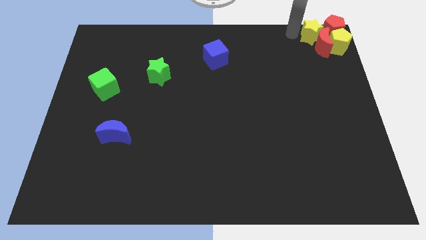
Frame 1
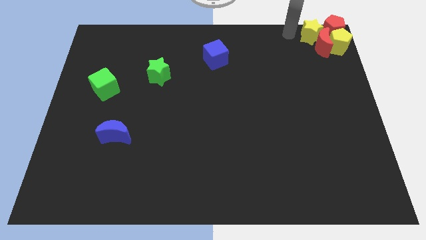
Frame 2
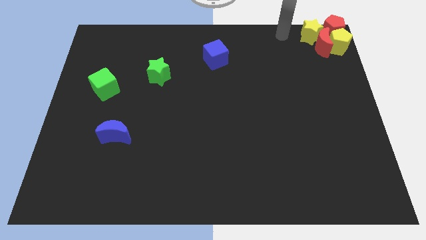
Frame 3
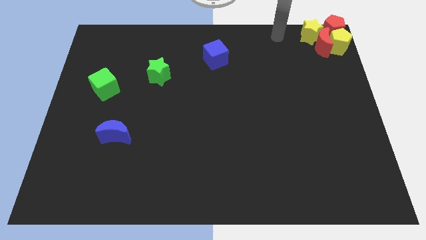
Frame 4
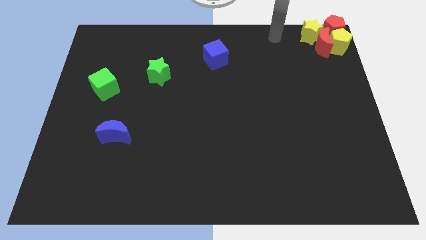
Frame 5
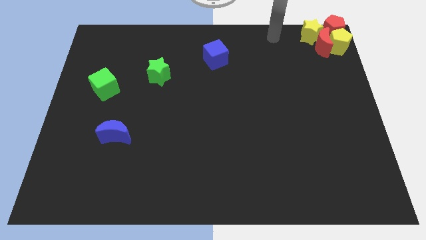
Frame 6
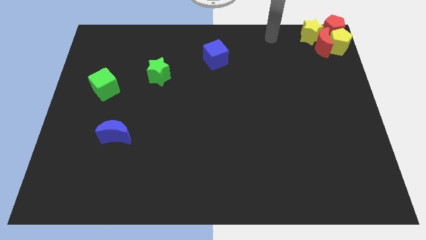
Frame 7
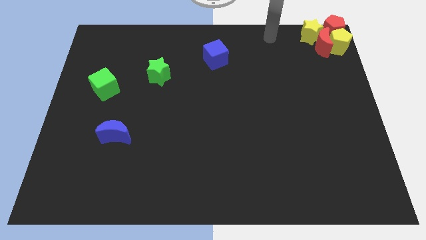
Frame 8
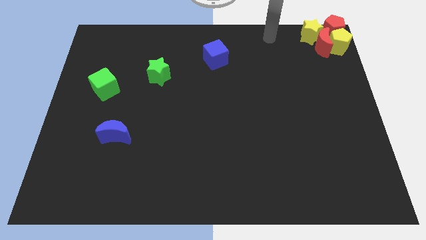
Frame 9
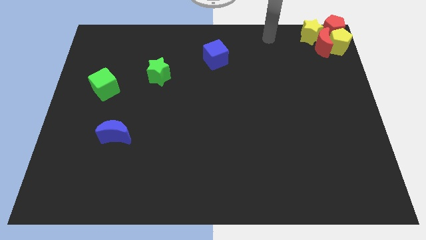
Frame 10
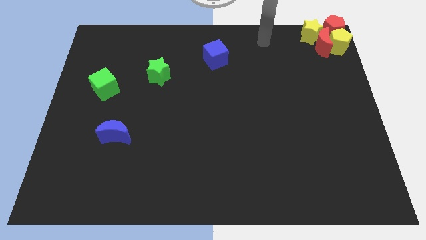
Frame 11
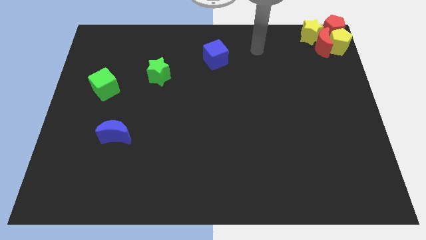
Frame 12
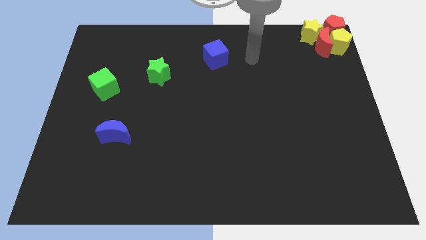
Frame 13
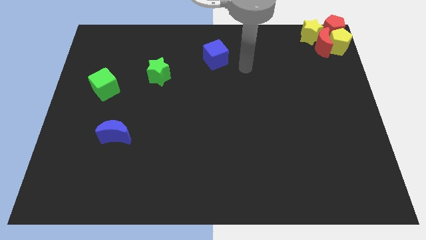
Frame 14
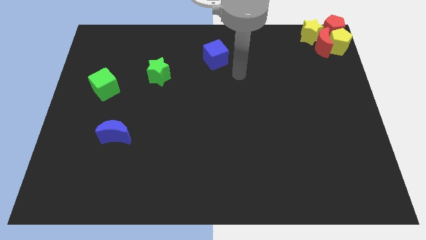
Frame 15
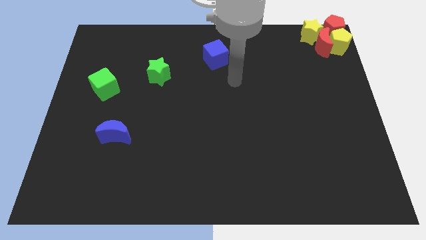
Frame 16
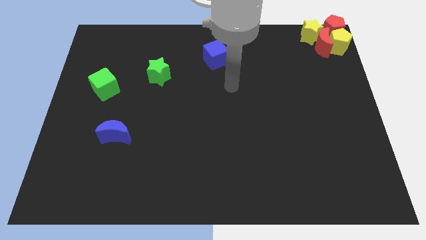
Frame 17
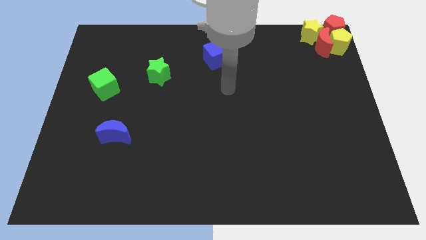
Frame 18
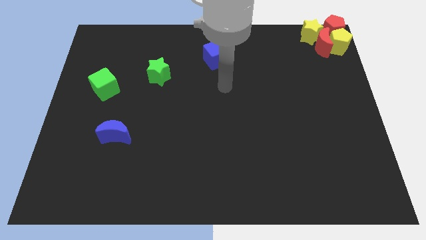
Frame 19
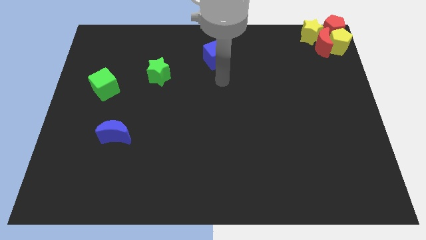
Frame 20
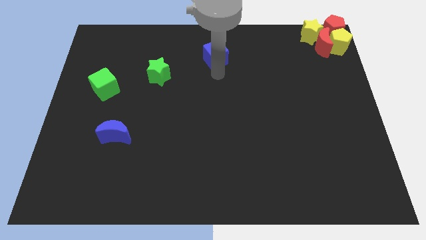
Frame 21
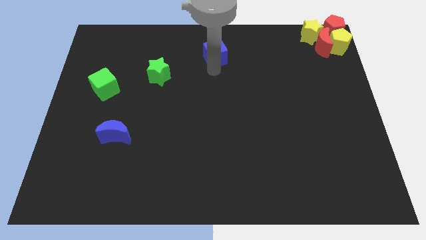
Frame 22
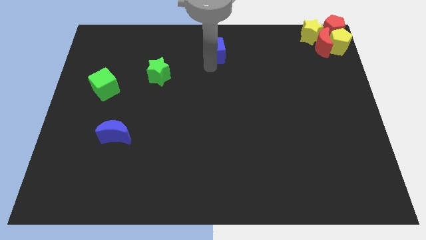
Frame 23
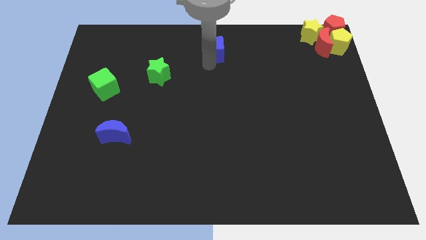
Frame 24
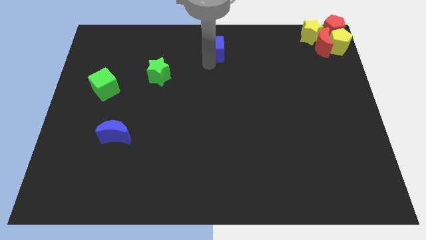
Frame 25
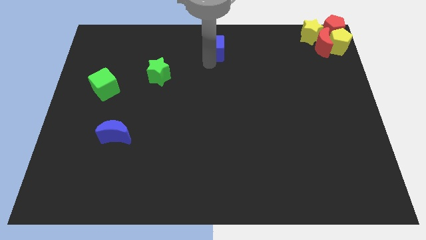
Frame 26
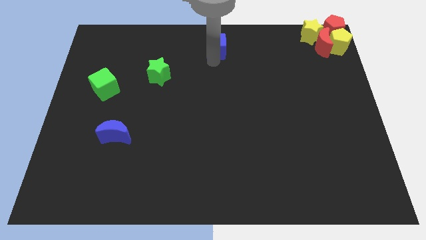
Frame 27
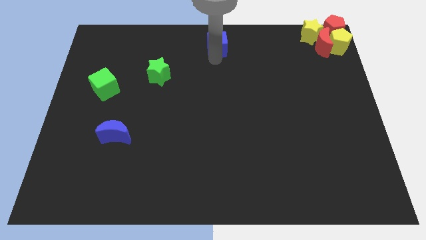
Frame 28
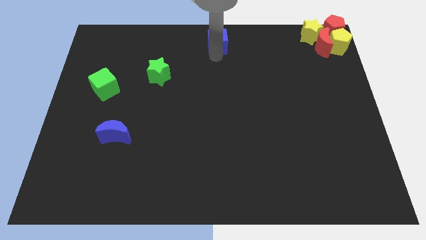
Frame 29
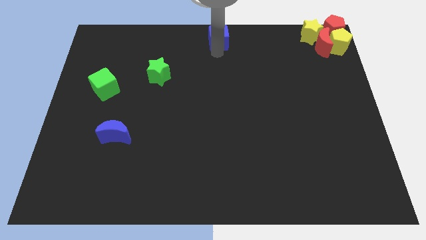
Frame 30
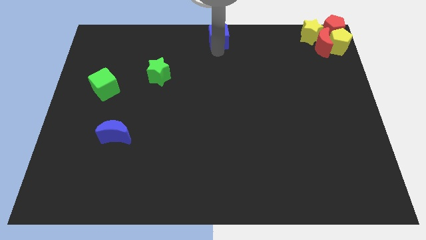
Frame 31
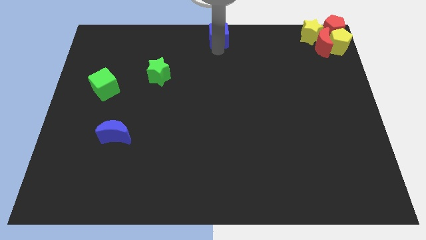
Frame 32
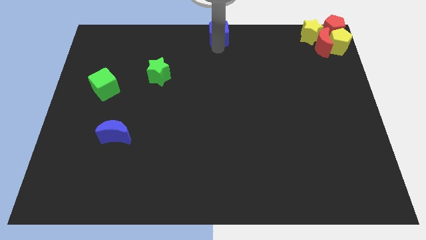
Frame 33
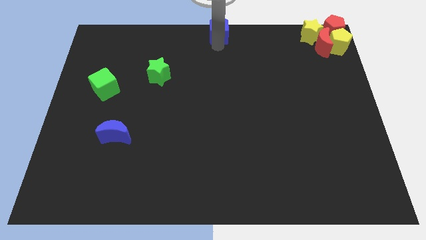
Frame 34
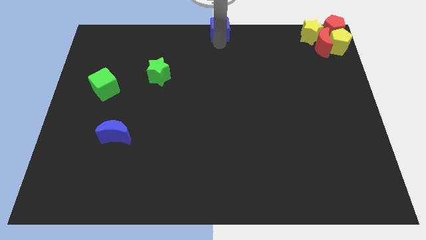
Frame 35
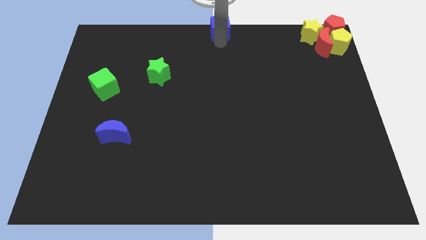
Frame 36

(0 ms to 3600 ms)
push the blue cube at the top center of the board

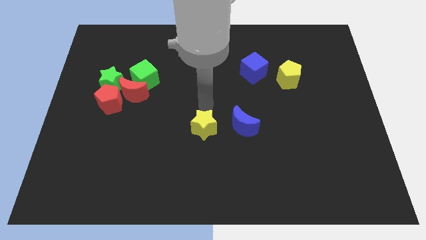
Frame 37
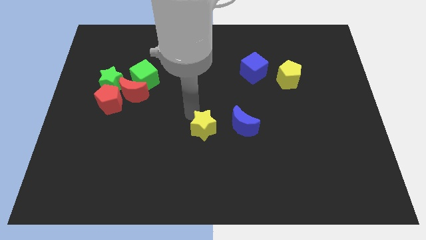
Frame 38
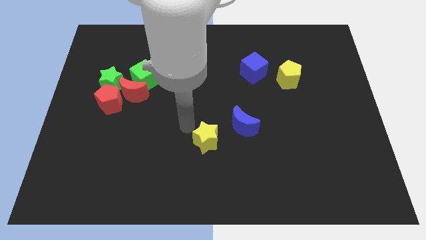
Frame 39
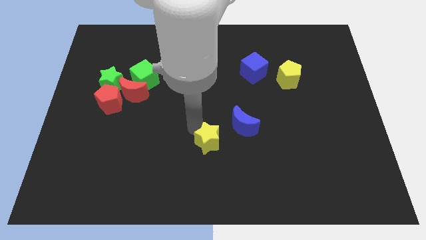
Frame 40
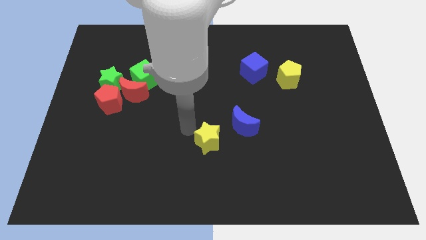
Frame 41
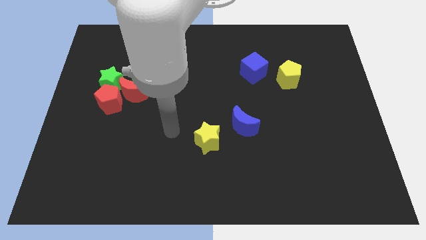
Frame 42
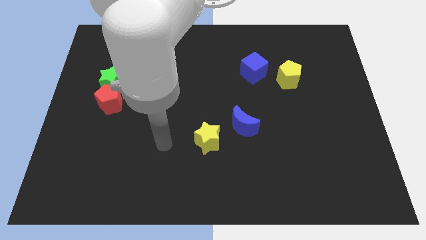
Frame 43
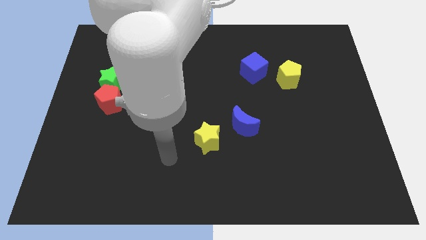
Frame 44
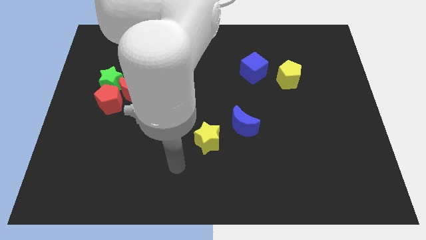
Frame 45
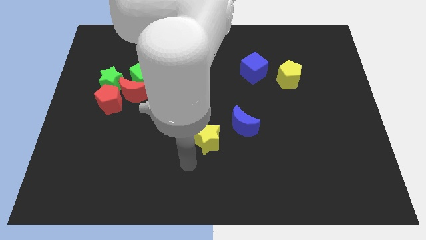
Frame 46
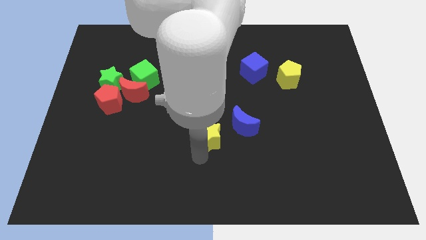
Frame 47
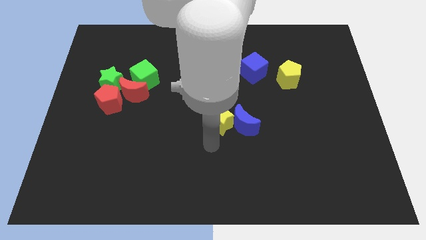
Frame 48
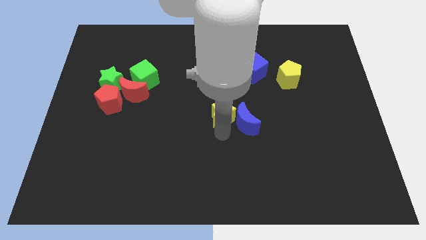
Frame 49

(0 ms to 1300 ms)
push the yellow star into the blue moon

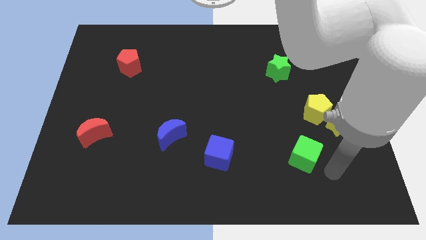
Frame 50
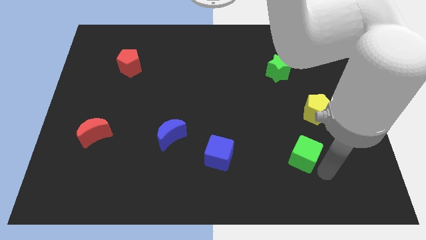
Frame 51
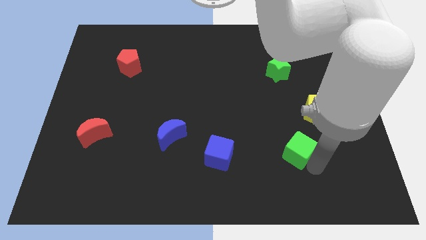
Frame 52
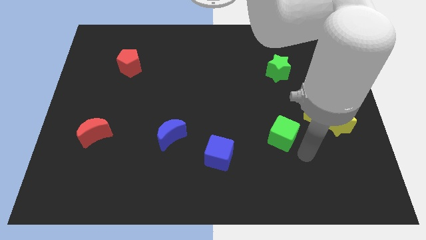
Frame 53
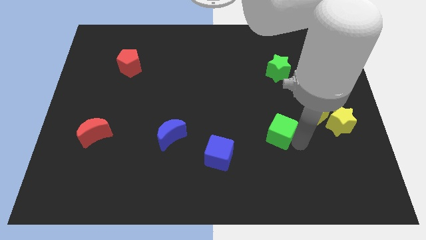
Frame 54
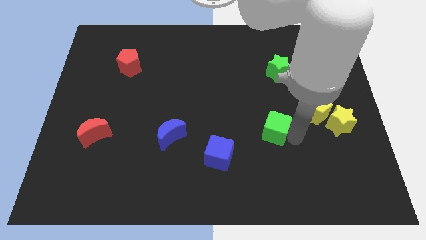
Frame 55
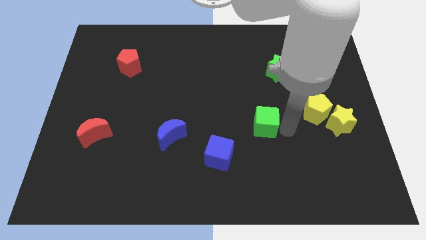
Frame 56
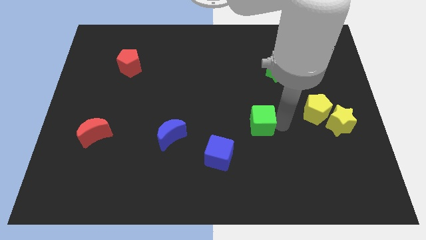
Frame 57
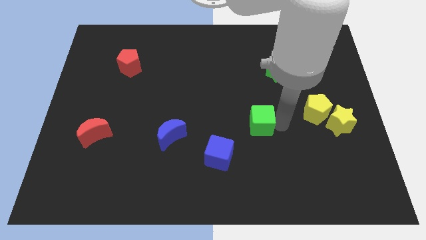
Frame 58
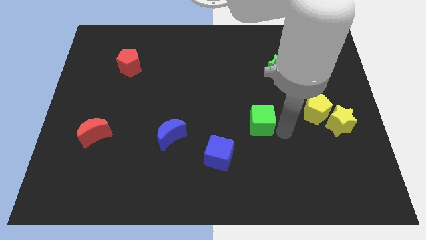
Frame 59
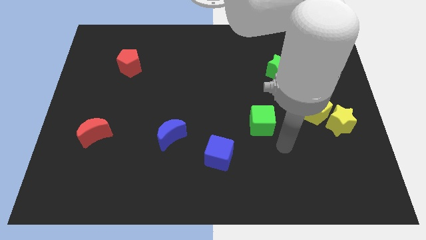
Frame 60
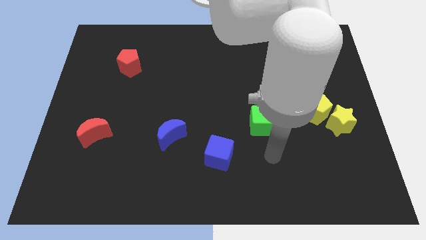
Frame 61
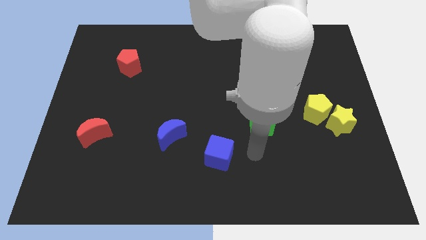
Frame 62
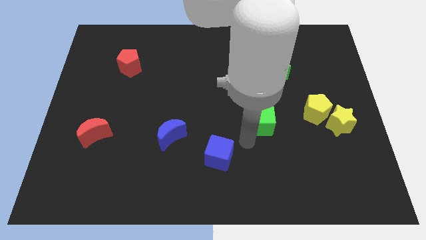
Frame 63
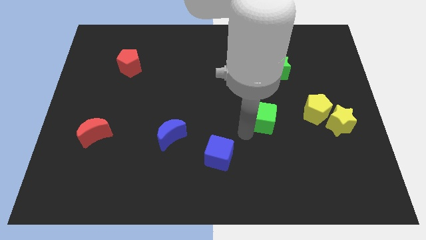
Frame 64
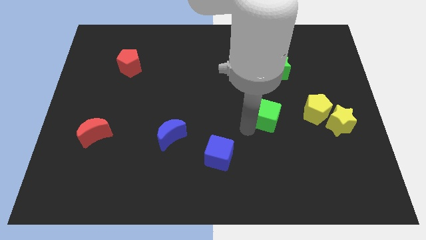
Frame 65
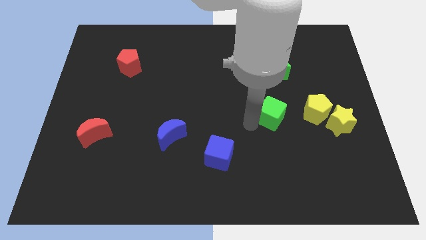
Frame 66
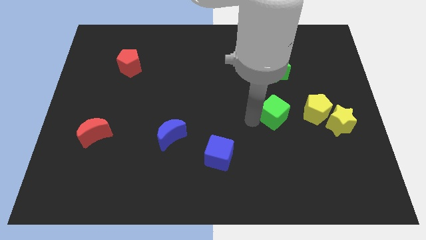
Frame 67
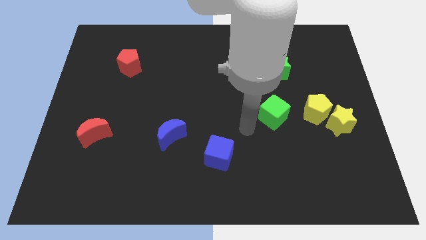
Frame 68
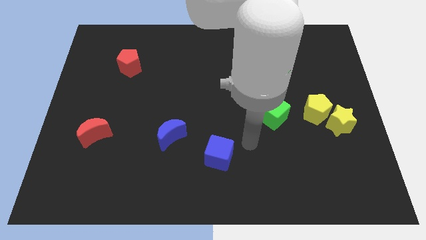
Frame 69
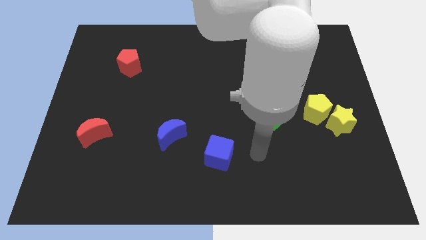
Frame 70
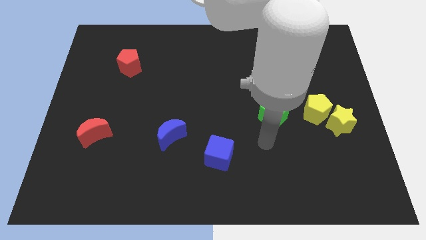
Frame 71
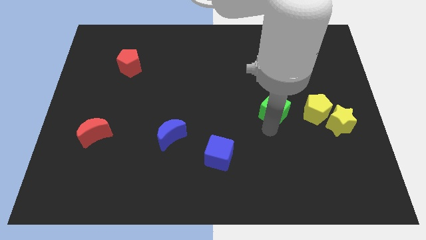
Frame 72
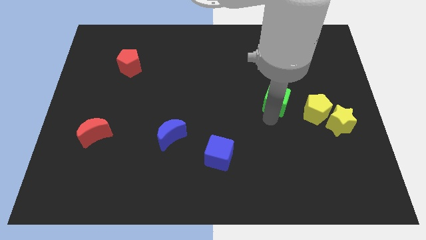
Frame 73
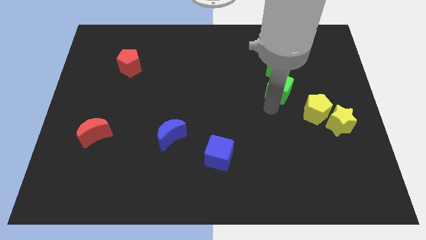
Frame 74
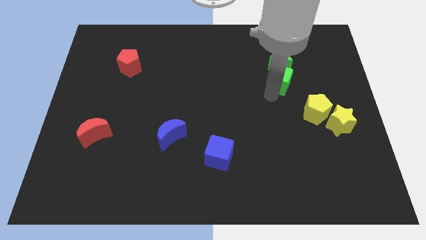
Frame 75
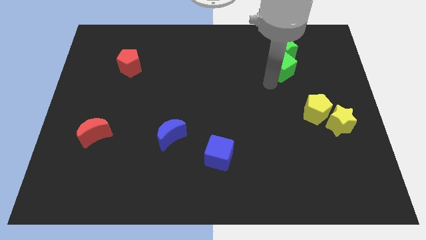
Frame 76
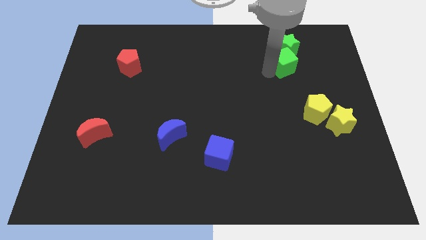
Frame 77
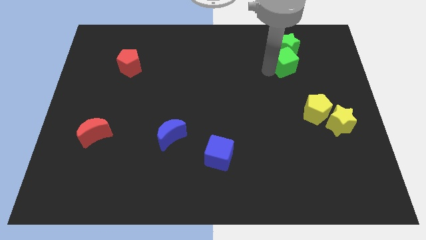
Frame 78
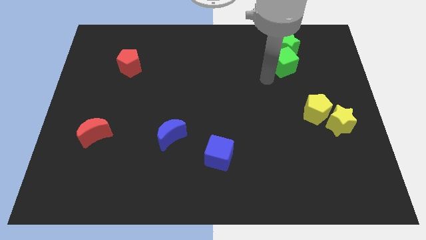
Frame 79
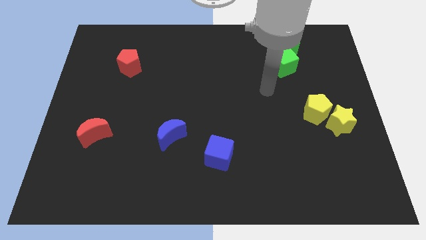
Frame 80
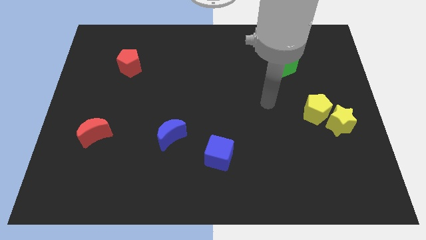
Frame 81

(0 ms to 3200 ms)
slide the green cube into the green star

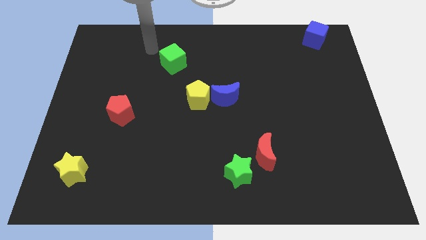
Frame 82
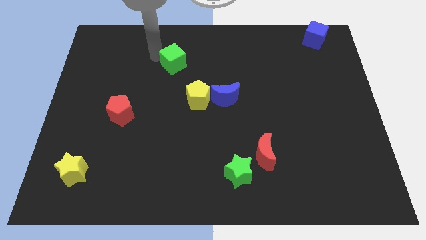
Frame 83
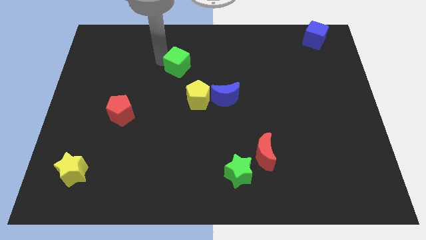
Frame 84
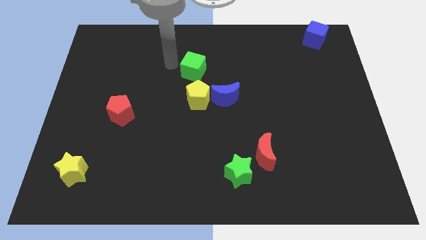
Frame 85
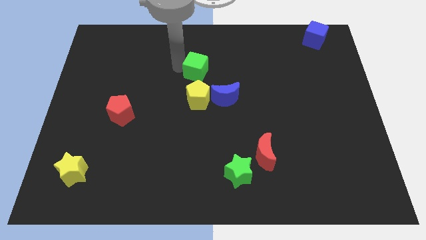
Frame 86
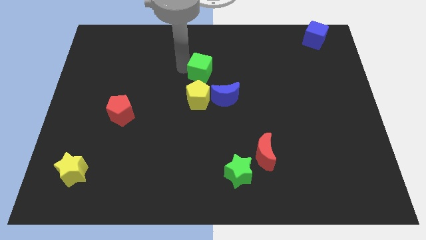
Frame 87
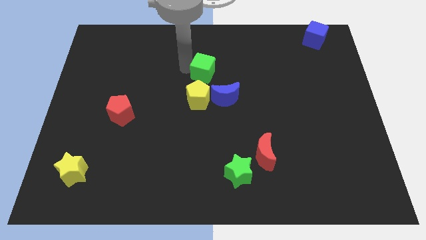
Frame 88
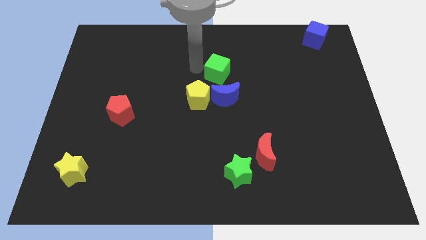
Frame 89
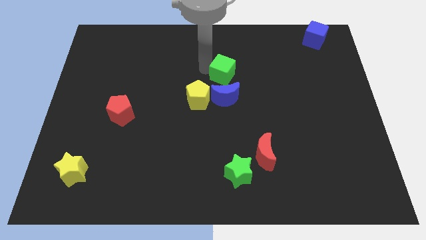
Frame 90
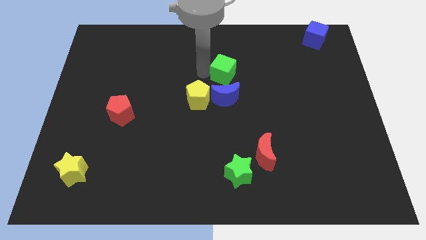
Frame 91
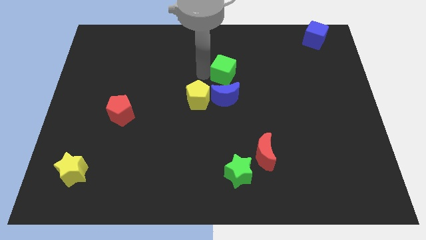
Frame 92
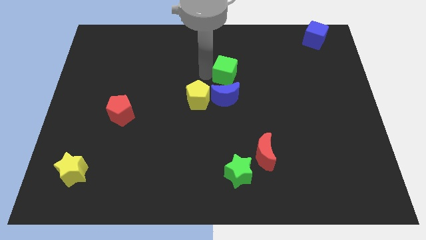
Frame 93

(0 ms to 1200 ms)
place green cube above blue moon
